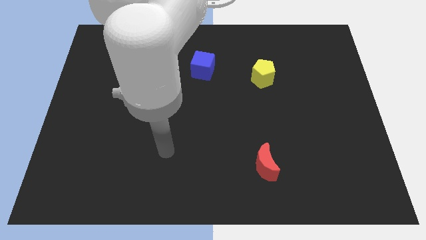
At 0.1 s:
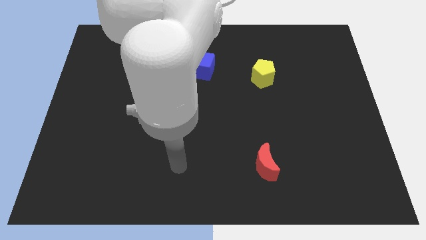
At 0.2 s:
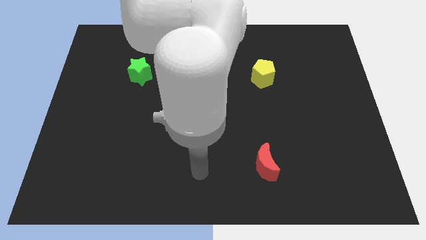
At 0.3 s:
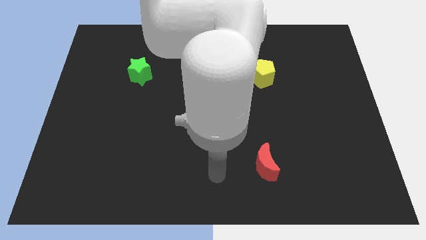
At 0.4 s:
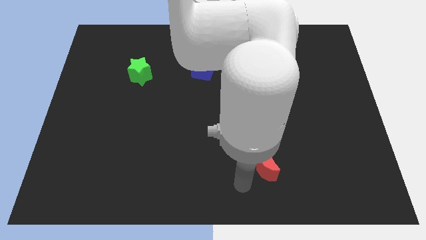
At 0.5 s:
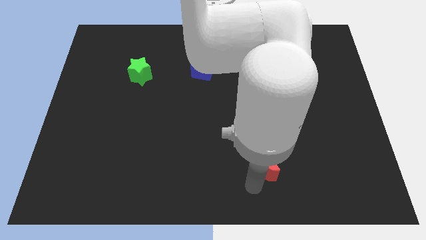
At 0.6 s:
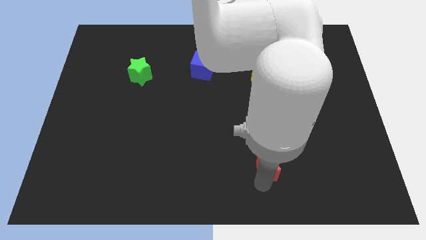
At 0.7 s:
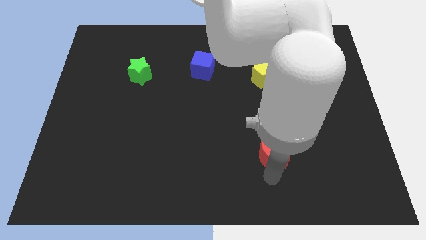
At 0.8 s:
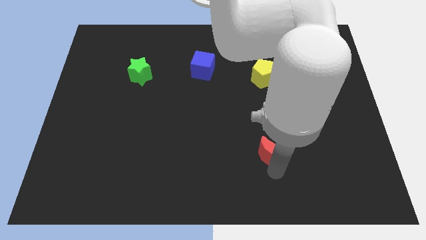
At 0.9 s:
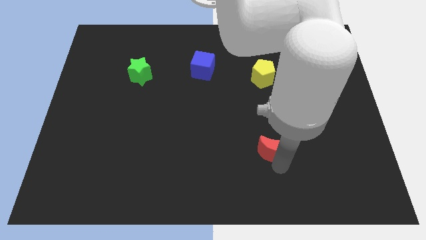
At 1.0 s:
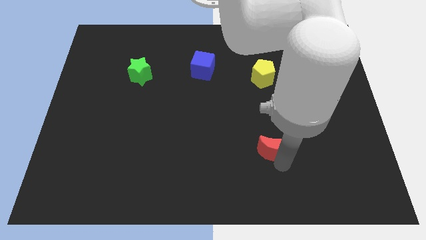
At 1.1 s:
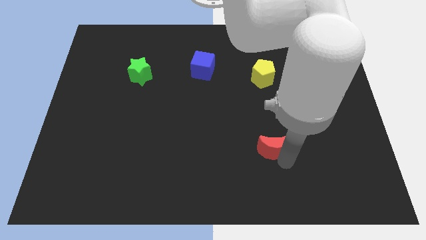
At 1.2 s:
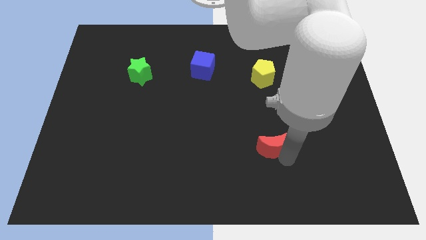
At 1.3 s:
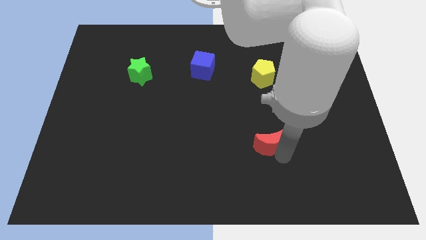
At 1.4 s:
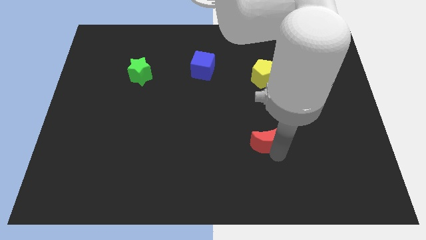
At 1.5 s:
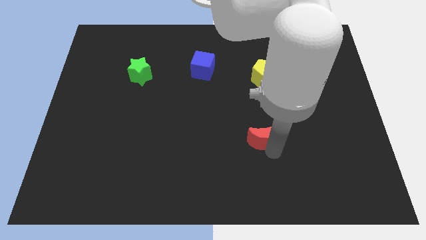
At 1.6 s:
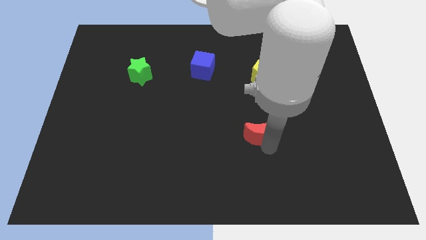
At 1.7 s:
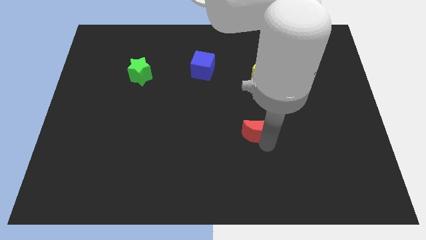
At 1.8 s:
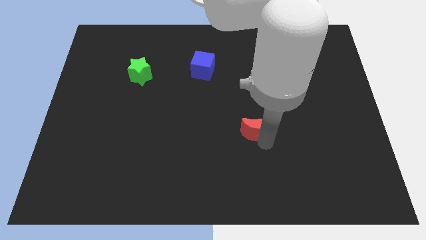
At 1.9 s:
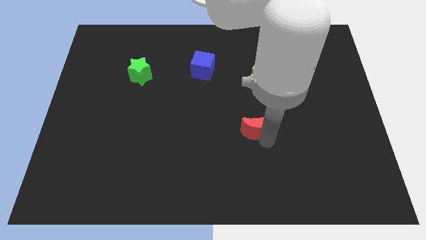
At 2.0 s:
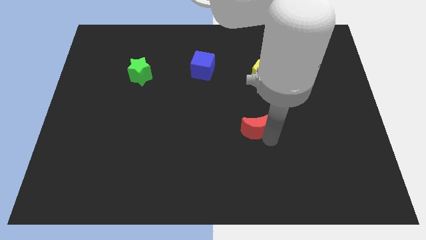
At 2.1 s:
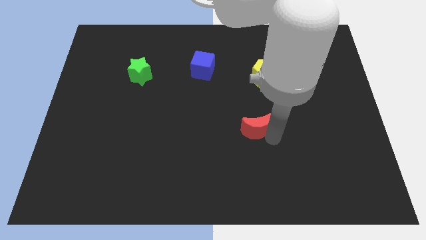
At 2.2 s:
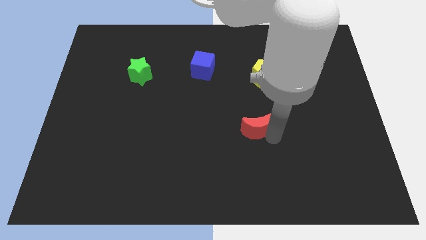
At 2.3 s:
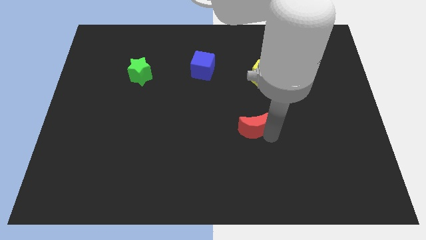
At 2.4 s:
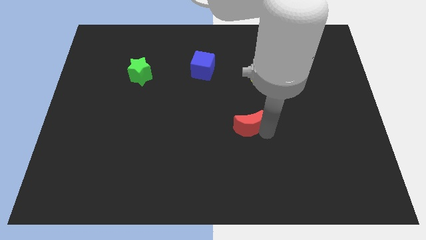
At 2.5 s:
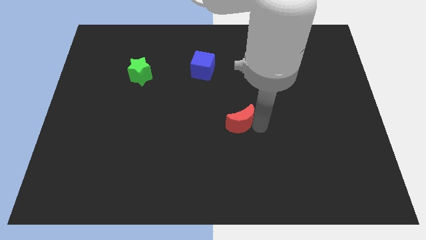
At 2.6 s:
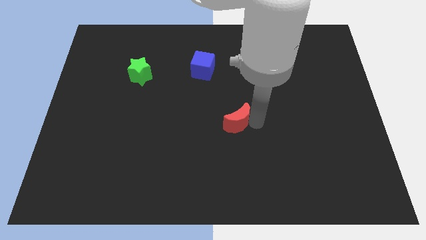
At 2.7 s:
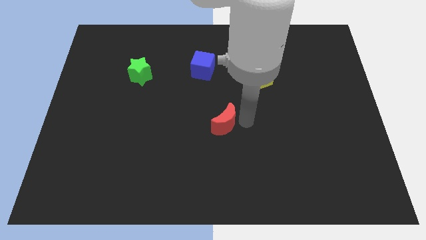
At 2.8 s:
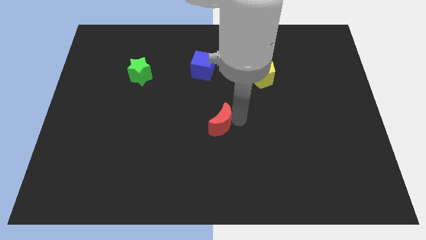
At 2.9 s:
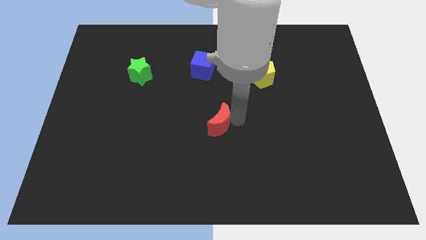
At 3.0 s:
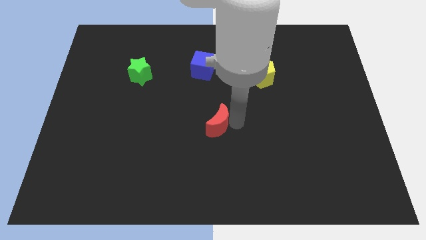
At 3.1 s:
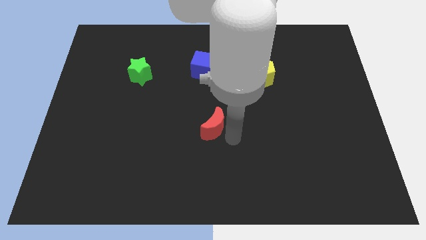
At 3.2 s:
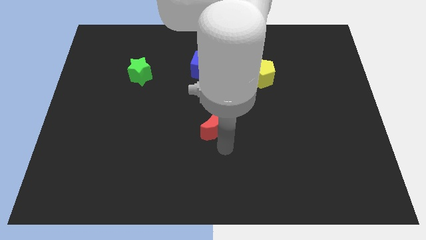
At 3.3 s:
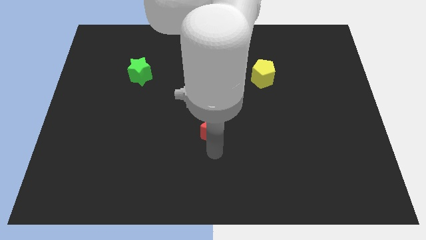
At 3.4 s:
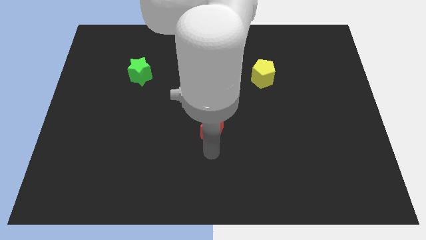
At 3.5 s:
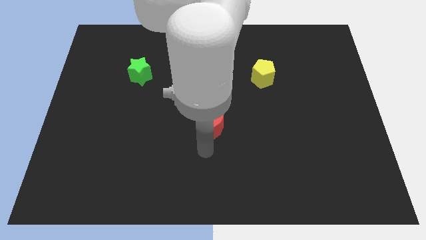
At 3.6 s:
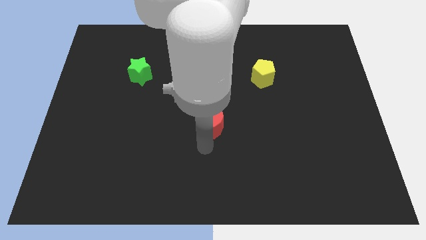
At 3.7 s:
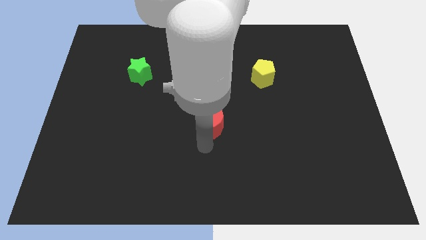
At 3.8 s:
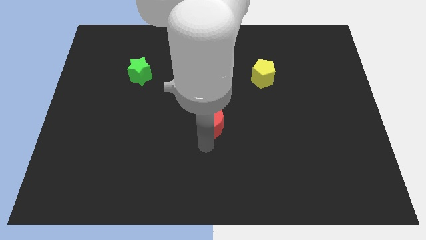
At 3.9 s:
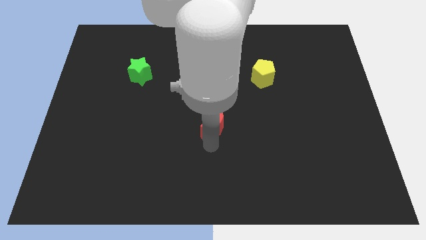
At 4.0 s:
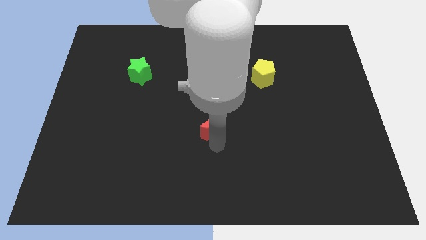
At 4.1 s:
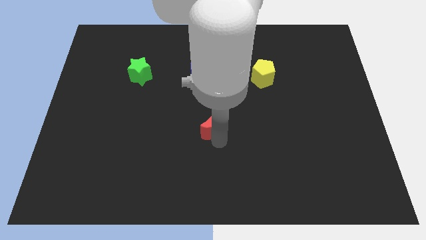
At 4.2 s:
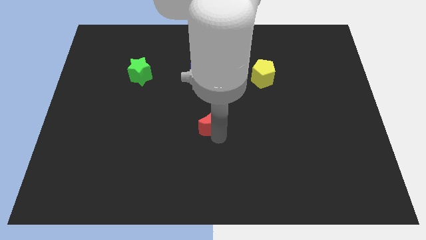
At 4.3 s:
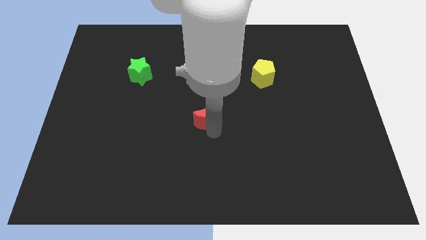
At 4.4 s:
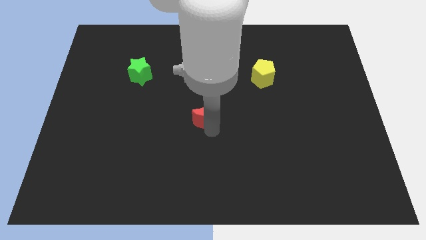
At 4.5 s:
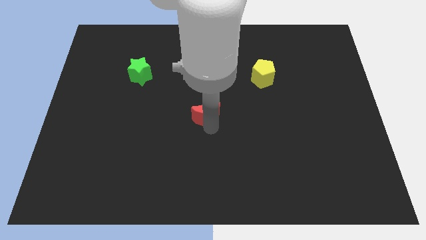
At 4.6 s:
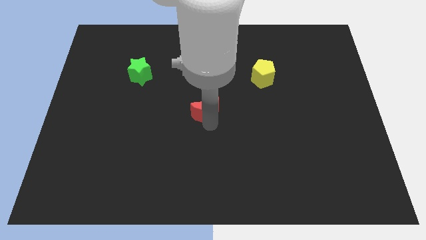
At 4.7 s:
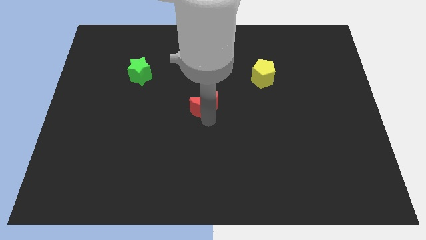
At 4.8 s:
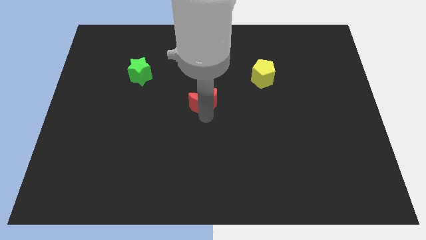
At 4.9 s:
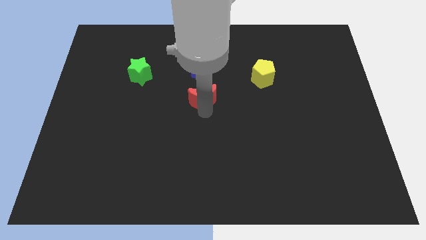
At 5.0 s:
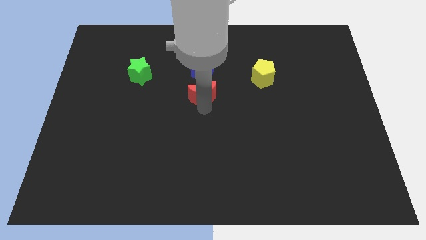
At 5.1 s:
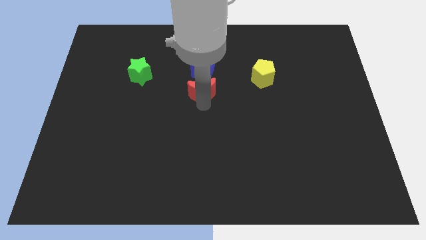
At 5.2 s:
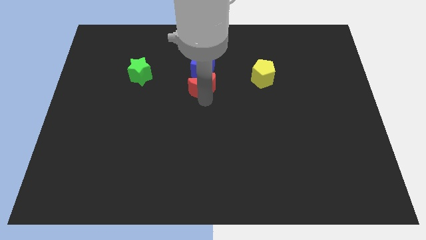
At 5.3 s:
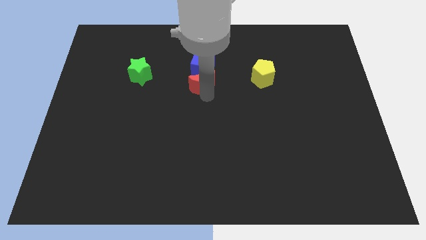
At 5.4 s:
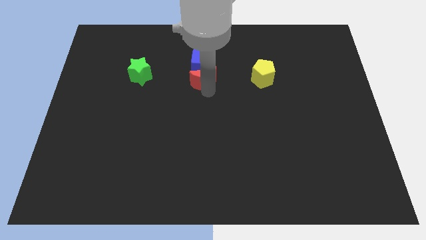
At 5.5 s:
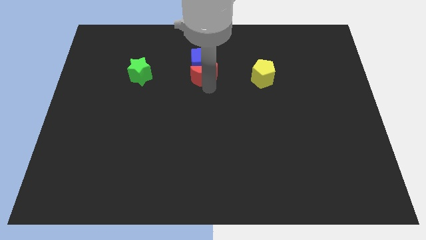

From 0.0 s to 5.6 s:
slide the red moon close to the cube

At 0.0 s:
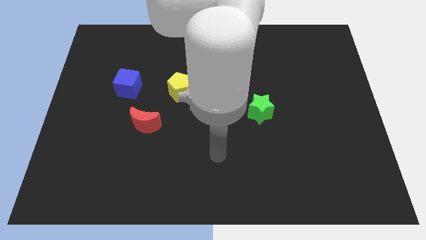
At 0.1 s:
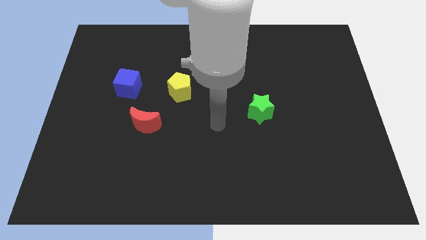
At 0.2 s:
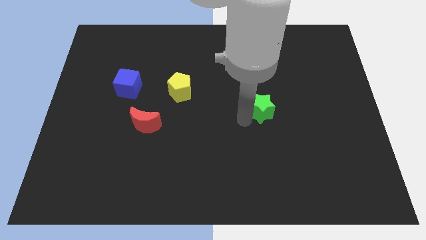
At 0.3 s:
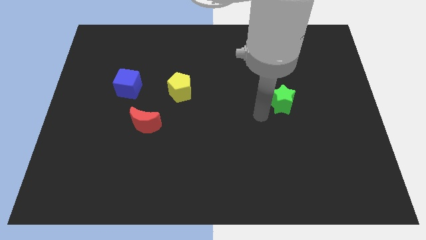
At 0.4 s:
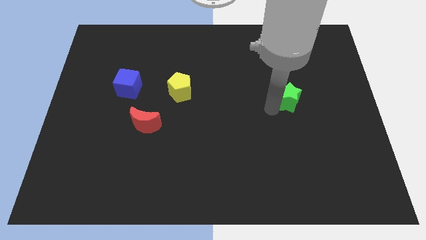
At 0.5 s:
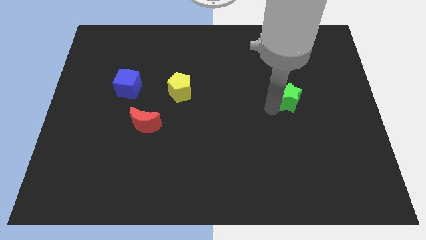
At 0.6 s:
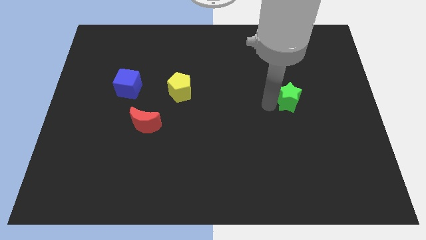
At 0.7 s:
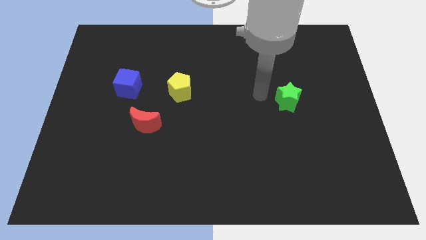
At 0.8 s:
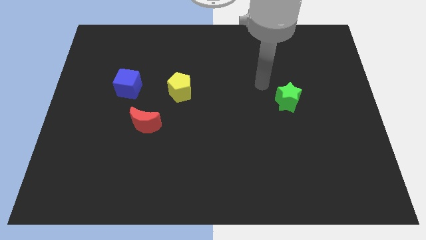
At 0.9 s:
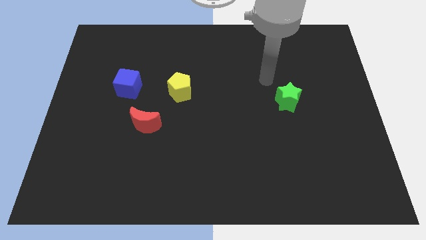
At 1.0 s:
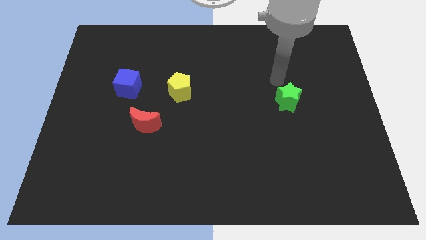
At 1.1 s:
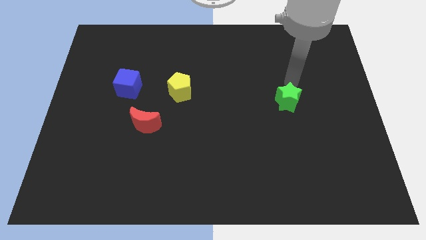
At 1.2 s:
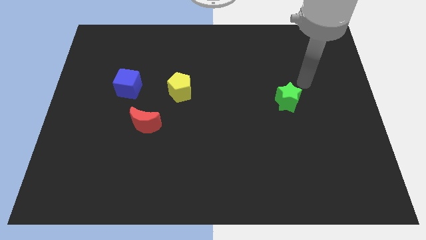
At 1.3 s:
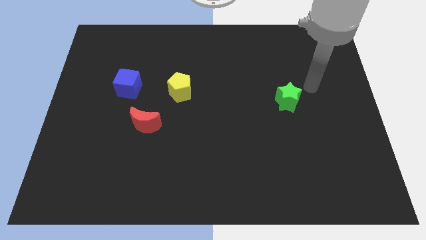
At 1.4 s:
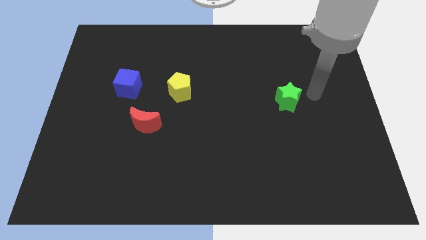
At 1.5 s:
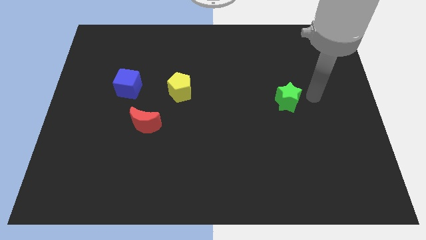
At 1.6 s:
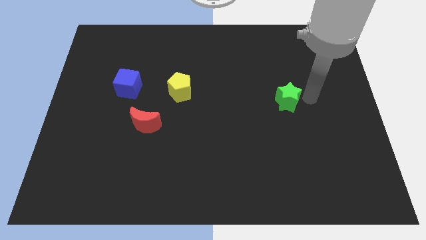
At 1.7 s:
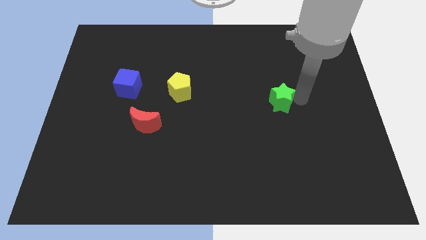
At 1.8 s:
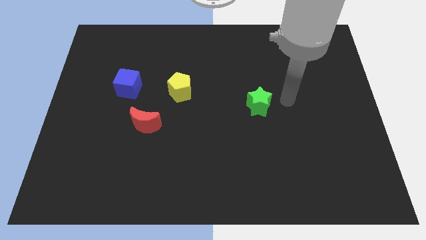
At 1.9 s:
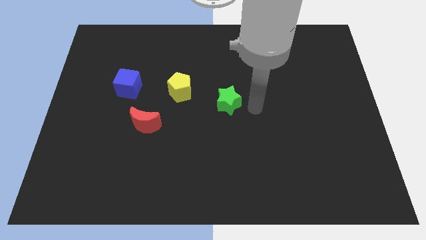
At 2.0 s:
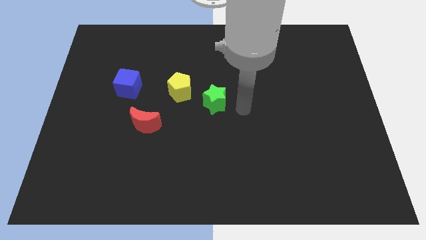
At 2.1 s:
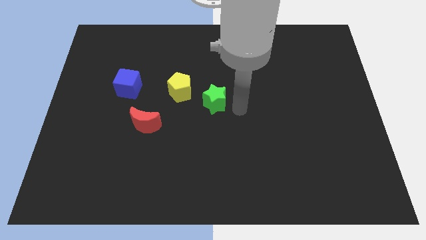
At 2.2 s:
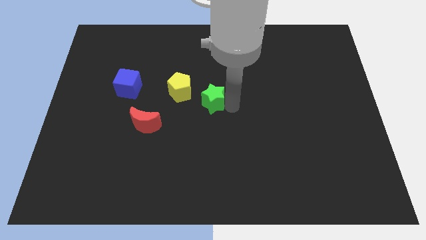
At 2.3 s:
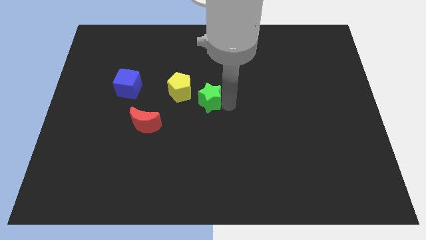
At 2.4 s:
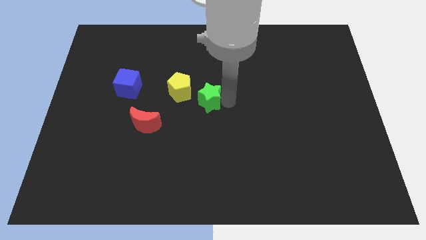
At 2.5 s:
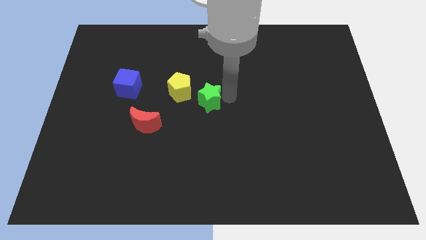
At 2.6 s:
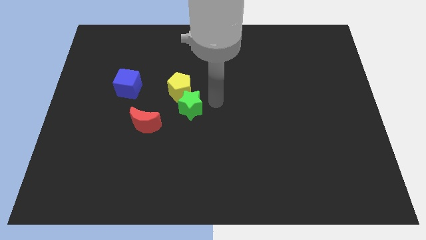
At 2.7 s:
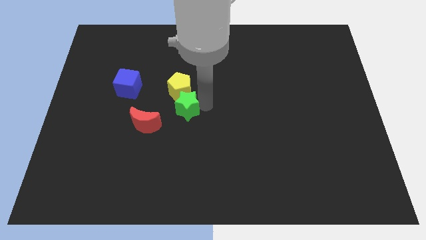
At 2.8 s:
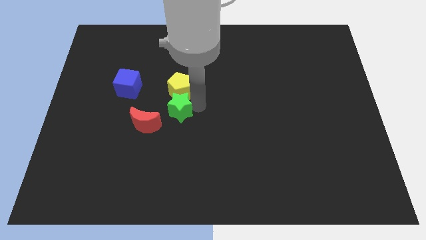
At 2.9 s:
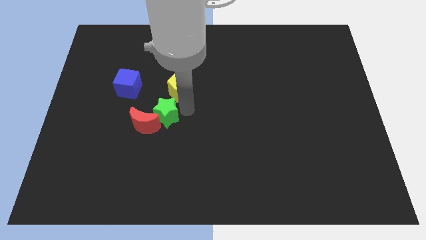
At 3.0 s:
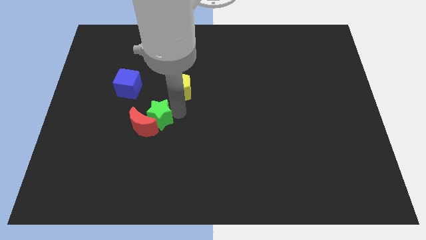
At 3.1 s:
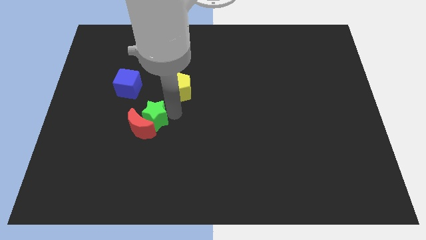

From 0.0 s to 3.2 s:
move the green star next to the red moon
